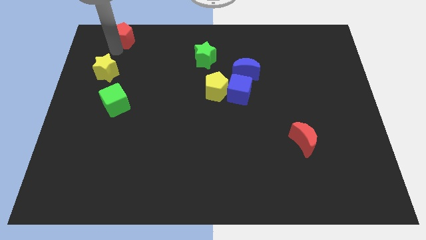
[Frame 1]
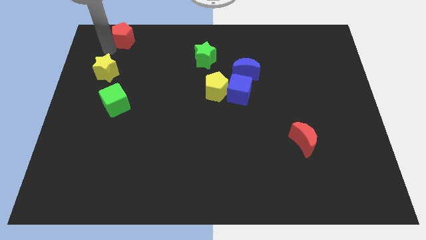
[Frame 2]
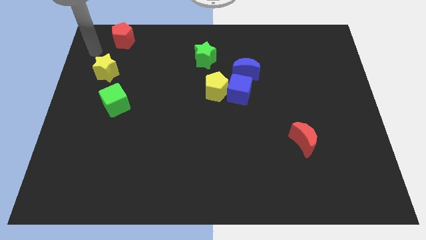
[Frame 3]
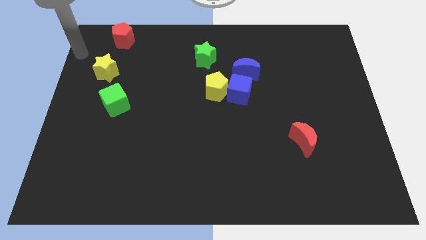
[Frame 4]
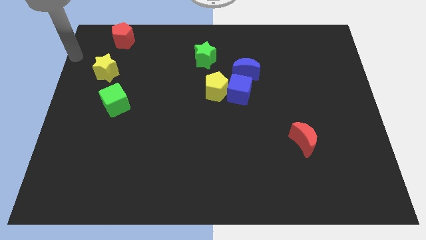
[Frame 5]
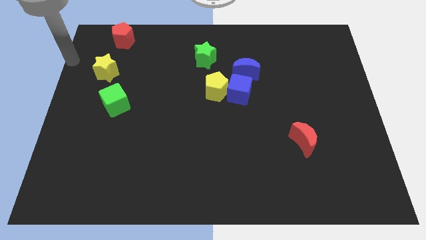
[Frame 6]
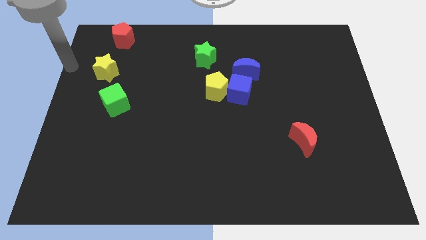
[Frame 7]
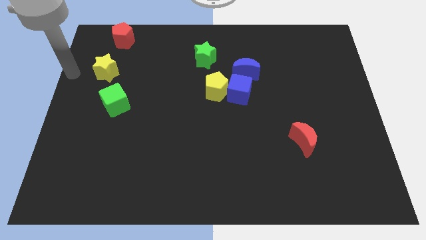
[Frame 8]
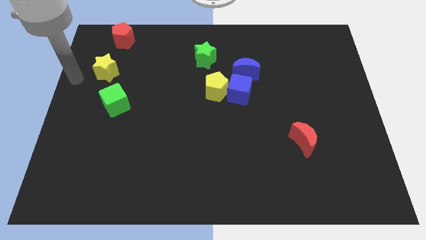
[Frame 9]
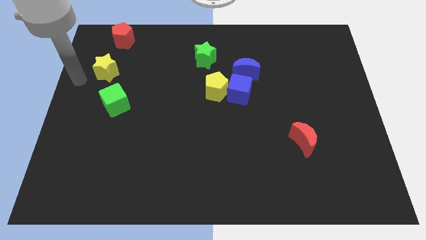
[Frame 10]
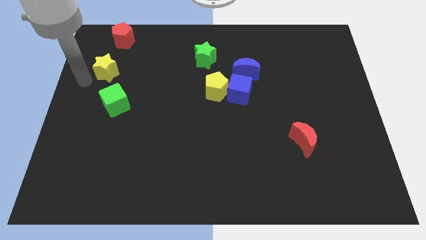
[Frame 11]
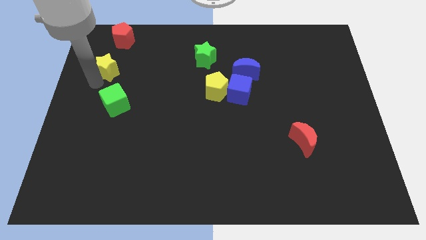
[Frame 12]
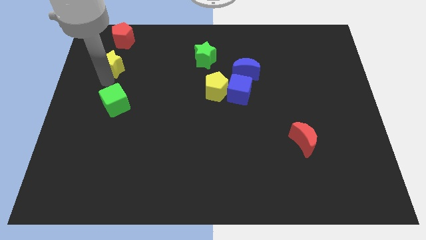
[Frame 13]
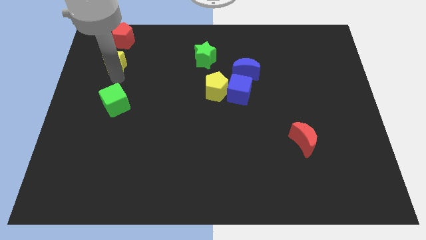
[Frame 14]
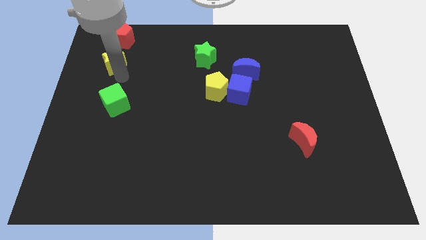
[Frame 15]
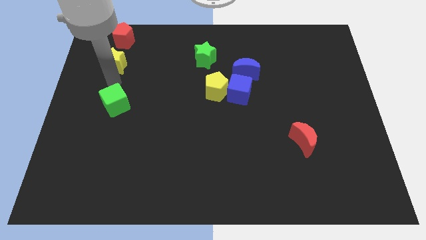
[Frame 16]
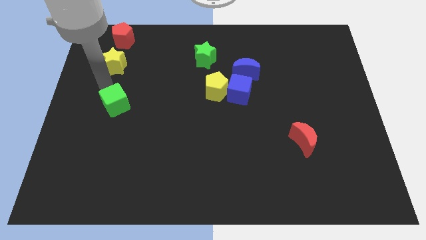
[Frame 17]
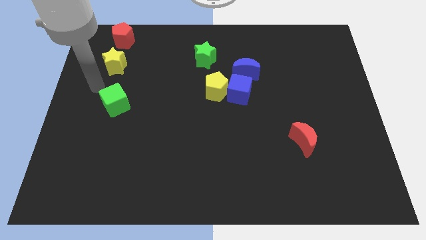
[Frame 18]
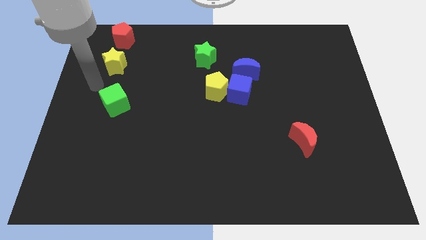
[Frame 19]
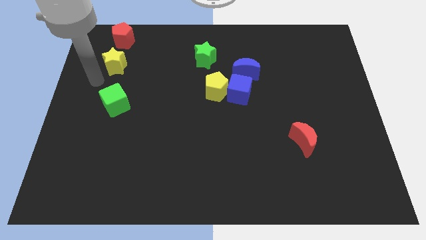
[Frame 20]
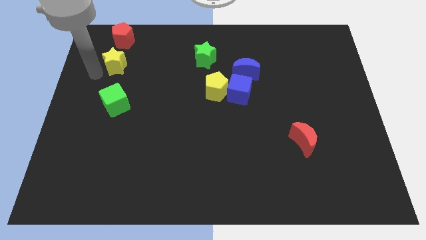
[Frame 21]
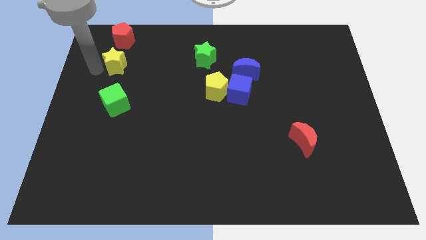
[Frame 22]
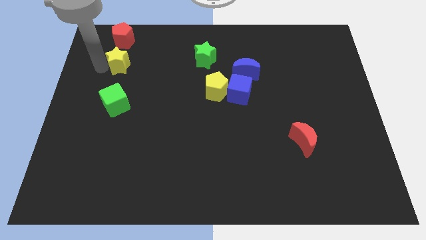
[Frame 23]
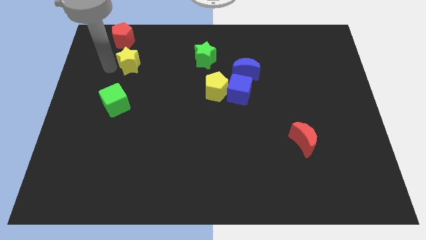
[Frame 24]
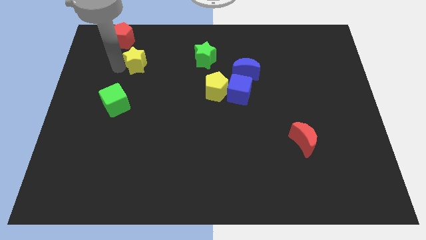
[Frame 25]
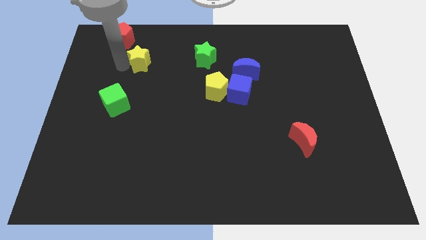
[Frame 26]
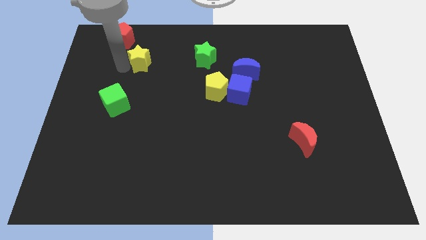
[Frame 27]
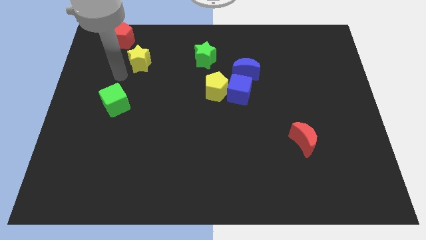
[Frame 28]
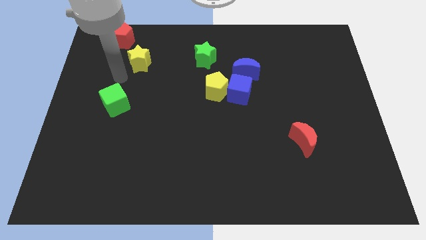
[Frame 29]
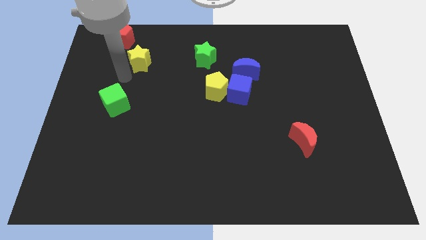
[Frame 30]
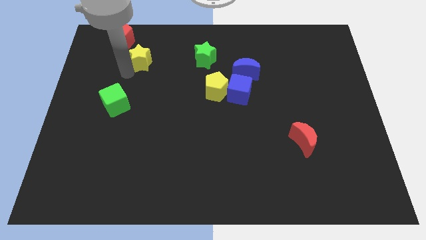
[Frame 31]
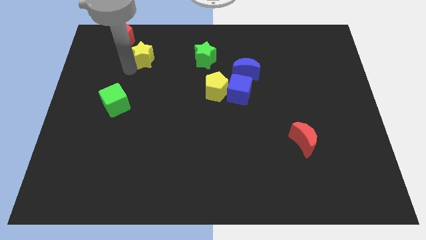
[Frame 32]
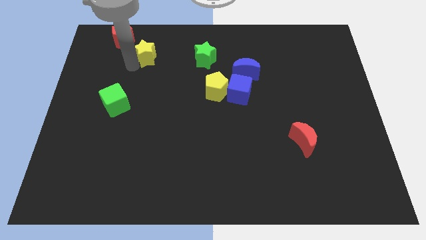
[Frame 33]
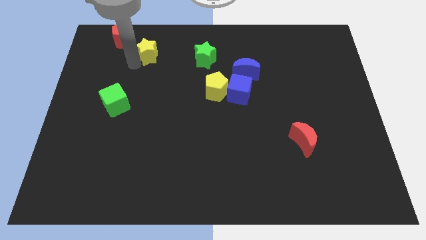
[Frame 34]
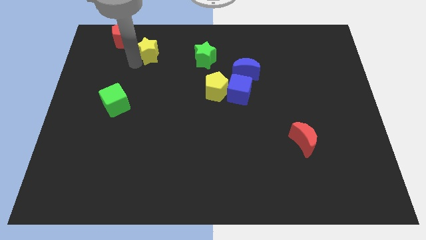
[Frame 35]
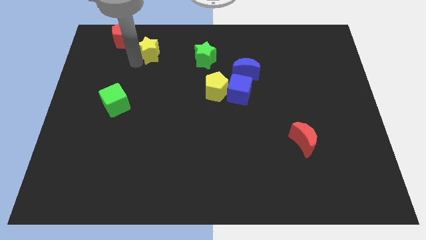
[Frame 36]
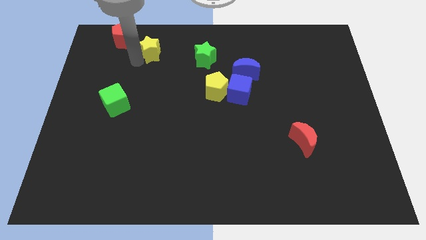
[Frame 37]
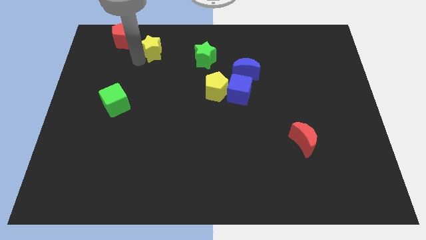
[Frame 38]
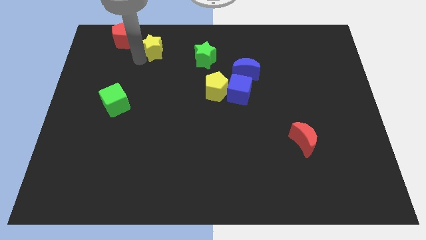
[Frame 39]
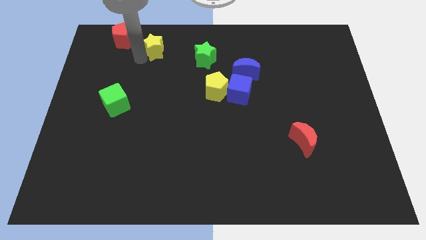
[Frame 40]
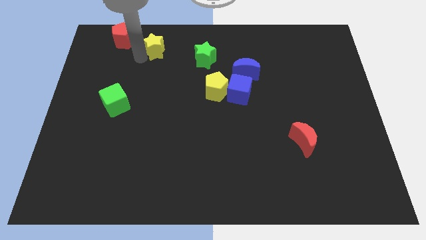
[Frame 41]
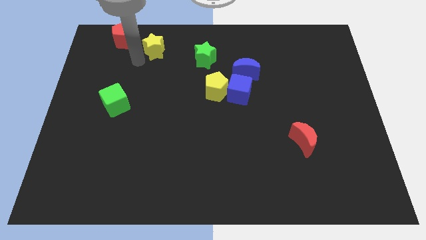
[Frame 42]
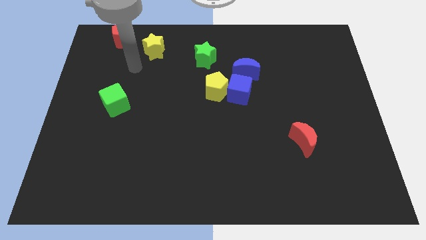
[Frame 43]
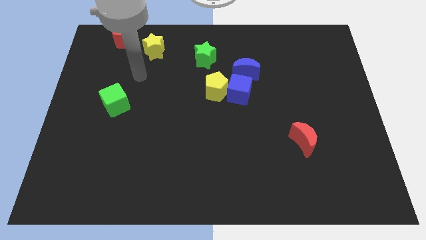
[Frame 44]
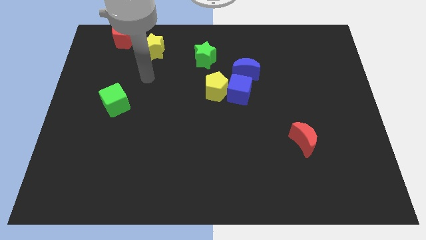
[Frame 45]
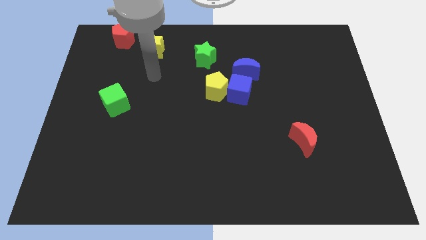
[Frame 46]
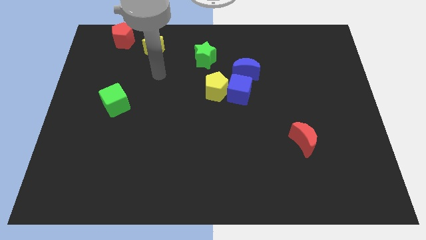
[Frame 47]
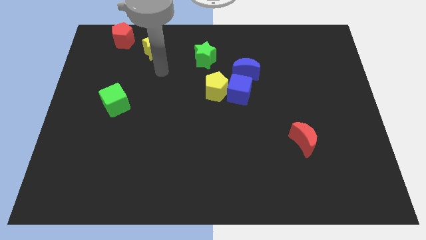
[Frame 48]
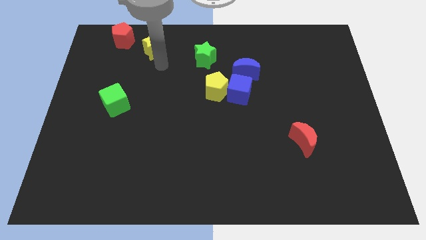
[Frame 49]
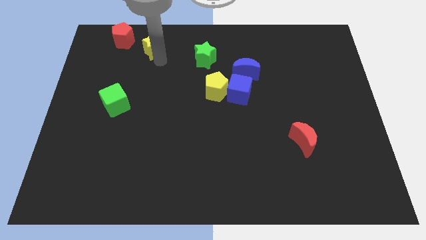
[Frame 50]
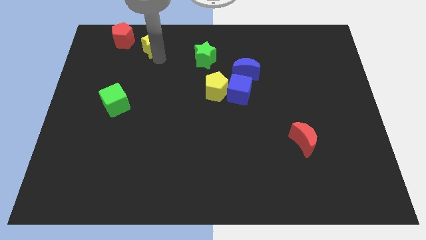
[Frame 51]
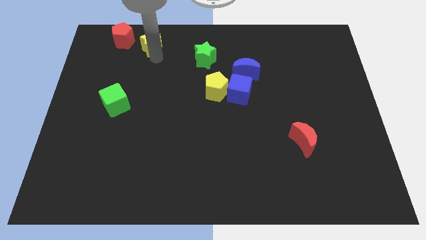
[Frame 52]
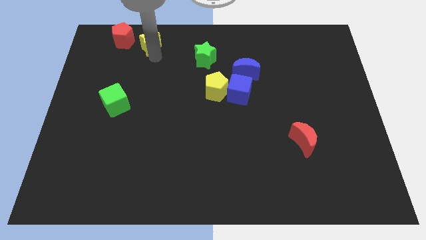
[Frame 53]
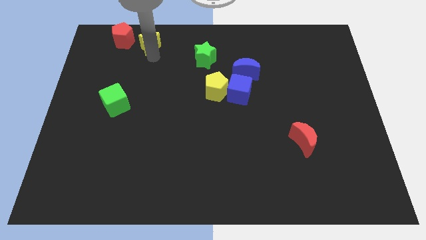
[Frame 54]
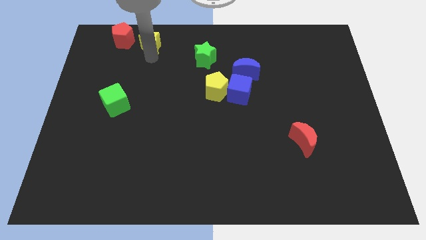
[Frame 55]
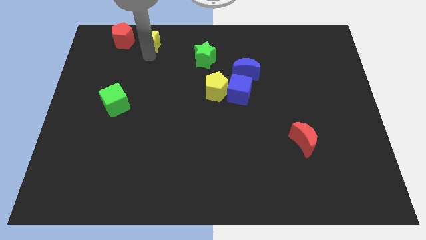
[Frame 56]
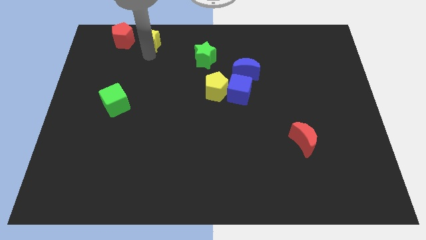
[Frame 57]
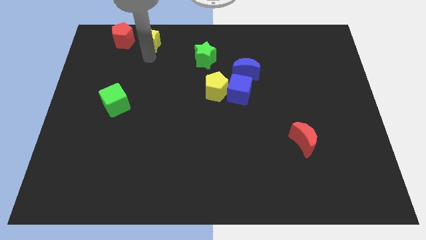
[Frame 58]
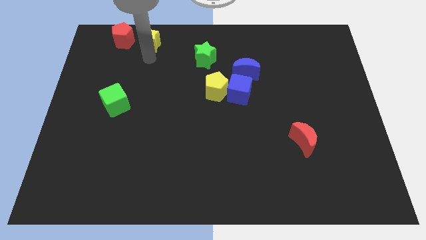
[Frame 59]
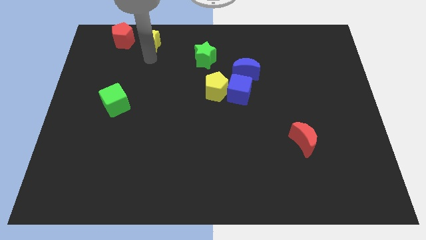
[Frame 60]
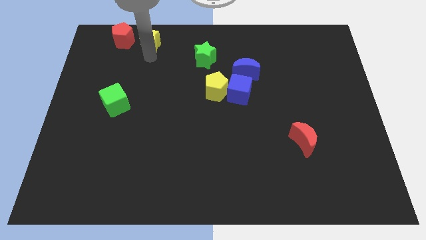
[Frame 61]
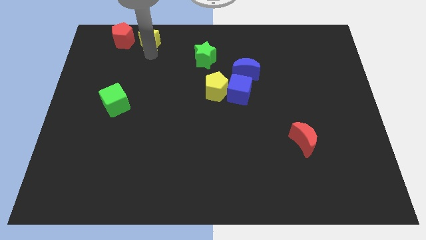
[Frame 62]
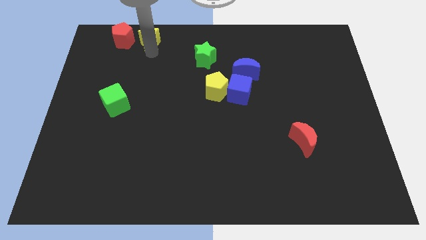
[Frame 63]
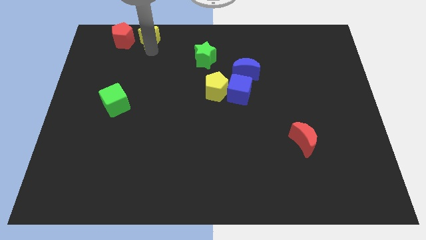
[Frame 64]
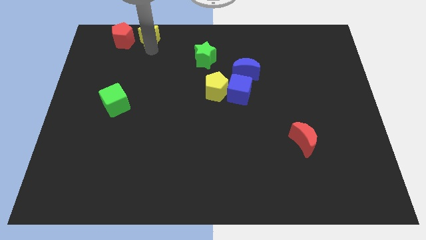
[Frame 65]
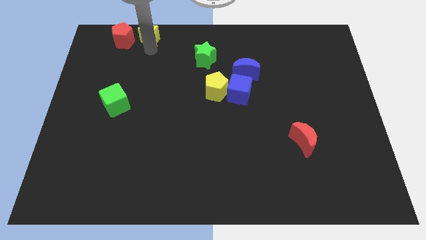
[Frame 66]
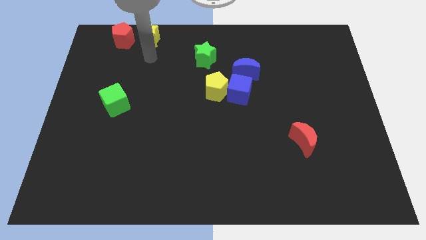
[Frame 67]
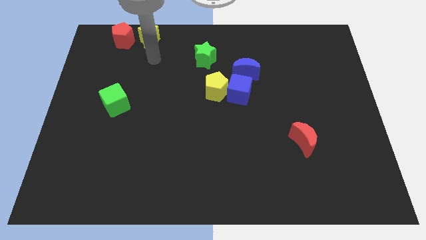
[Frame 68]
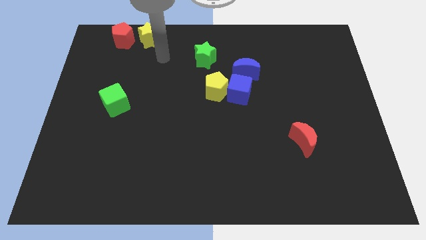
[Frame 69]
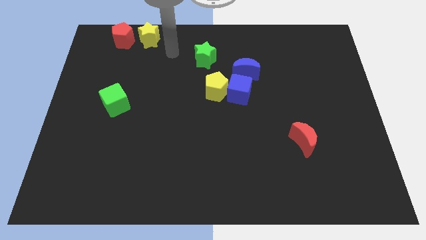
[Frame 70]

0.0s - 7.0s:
place the yellow star right to the red pentagon

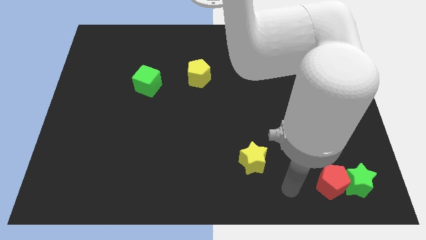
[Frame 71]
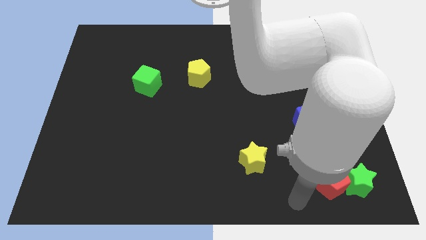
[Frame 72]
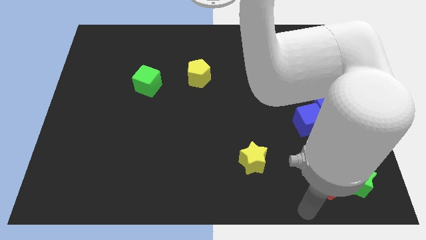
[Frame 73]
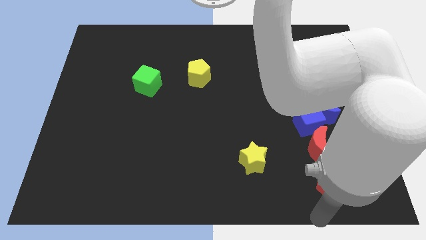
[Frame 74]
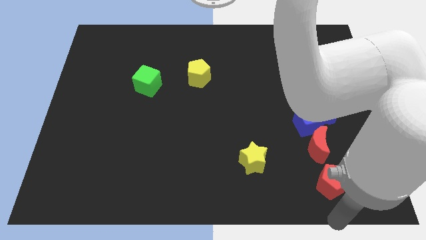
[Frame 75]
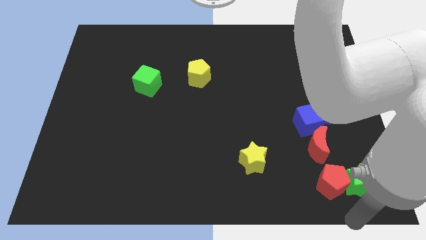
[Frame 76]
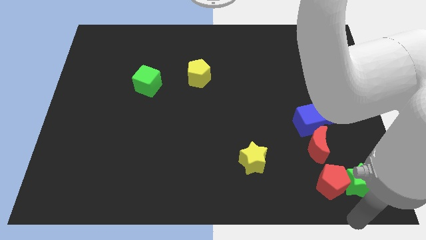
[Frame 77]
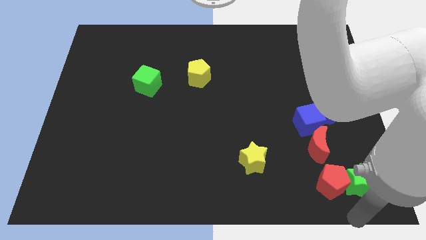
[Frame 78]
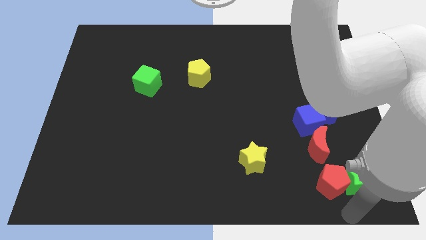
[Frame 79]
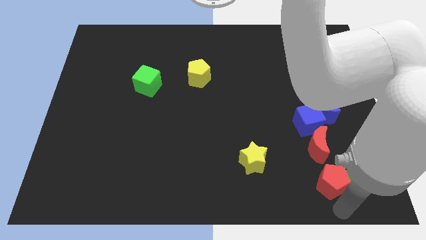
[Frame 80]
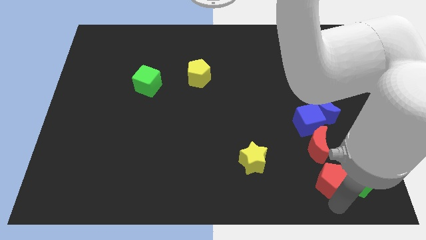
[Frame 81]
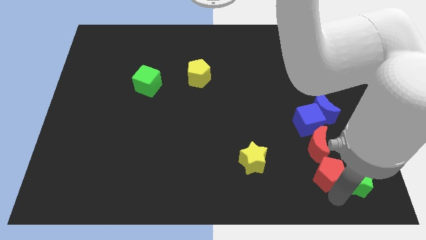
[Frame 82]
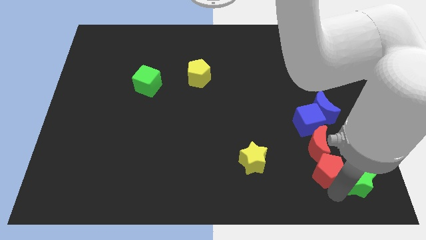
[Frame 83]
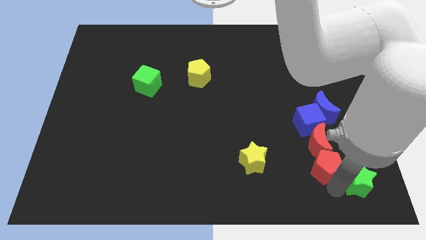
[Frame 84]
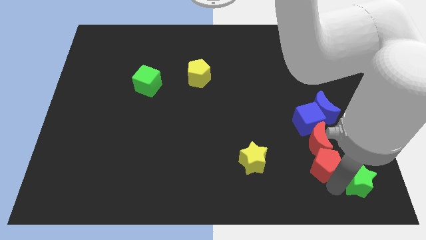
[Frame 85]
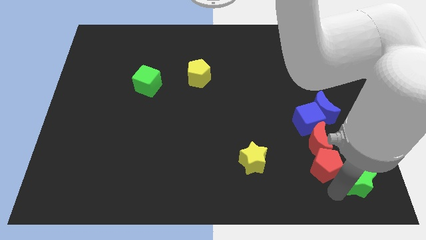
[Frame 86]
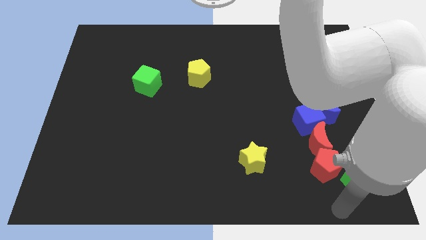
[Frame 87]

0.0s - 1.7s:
push the red pentagon into the red crescent

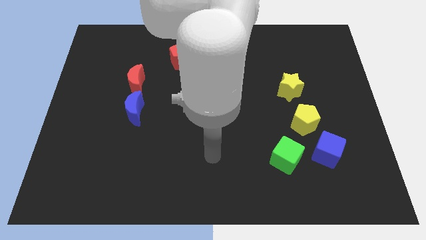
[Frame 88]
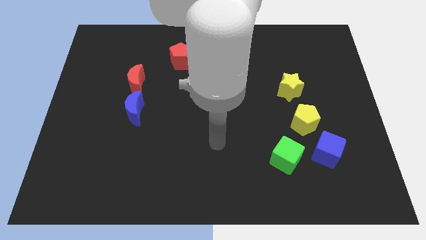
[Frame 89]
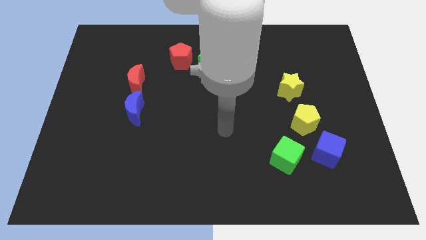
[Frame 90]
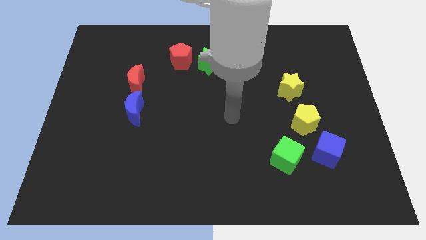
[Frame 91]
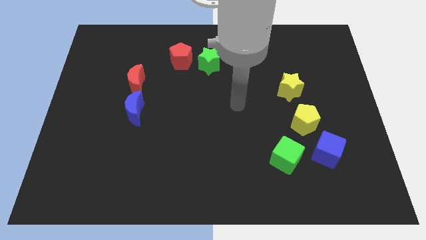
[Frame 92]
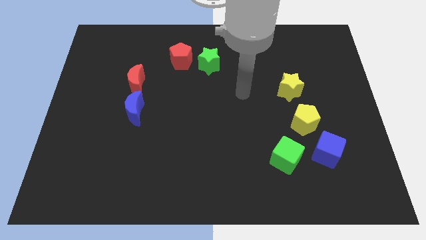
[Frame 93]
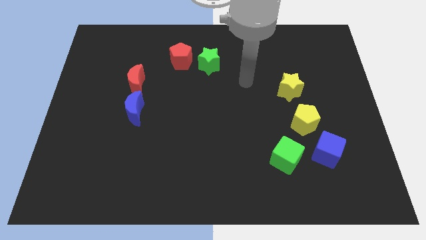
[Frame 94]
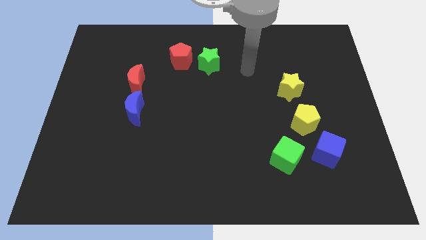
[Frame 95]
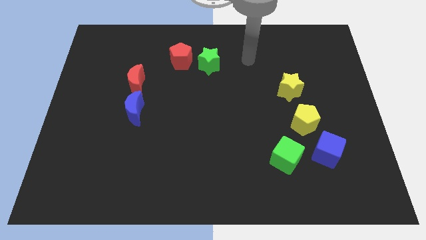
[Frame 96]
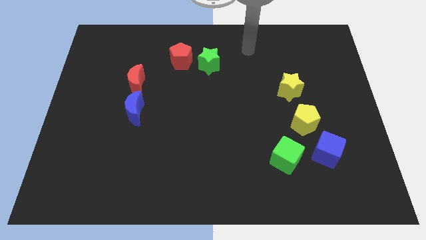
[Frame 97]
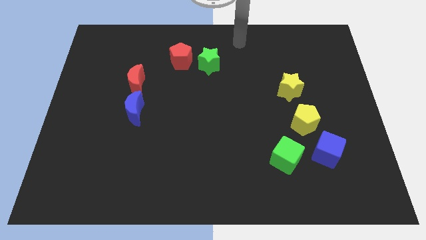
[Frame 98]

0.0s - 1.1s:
slide your arm towards top center
